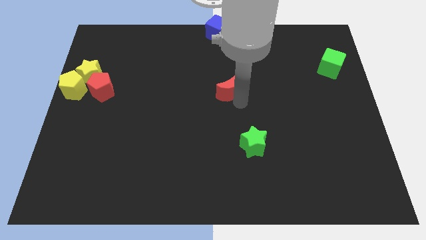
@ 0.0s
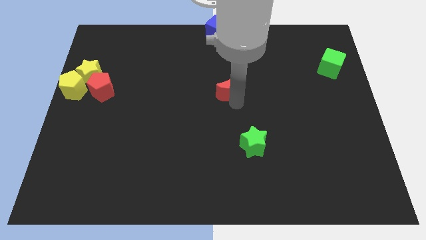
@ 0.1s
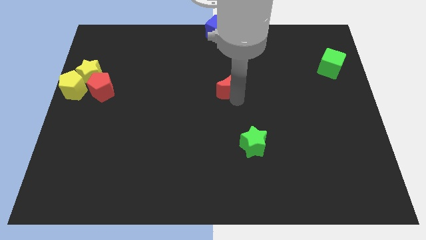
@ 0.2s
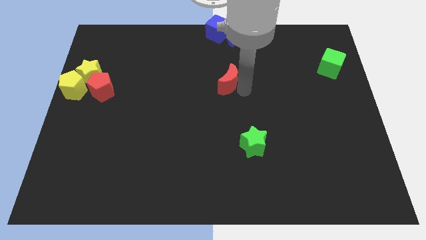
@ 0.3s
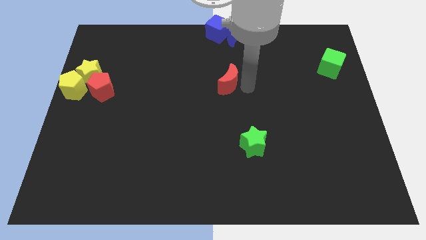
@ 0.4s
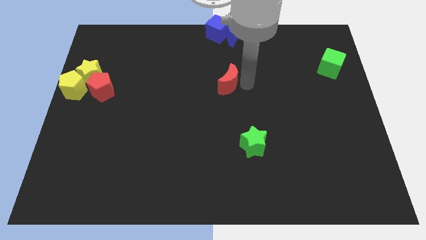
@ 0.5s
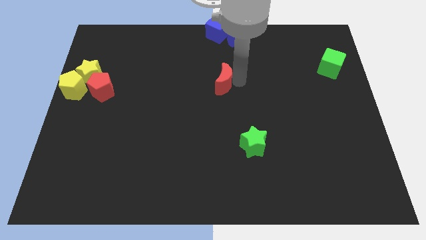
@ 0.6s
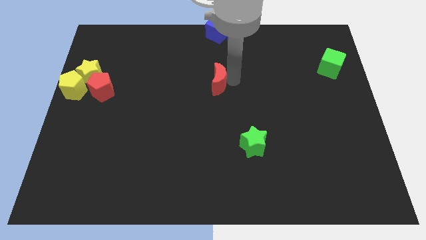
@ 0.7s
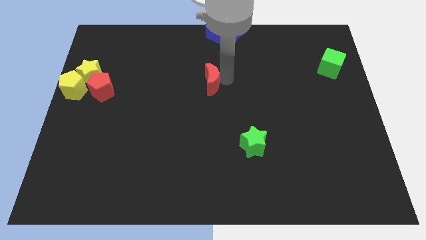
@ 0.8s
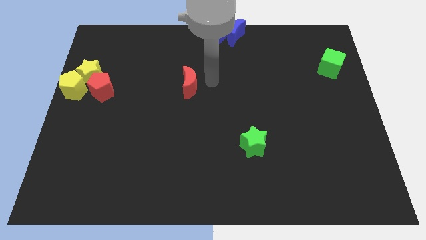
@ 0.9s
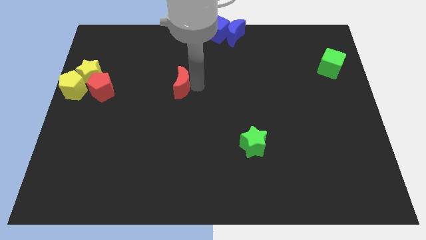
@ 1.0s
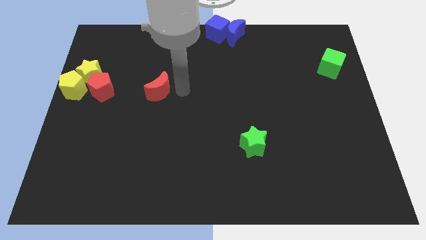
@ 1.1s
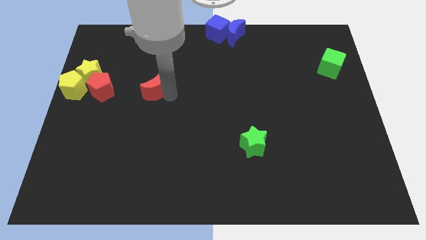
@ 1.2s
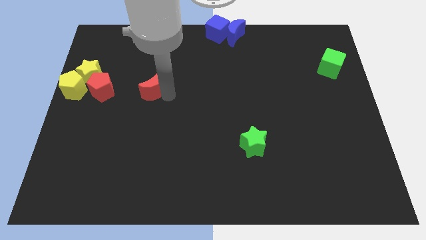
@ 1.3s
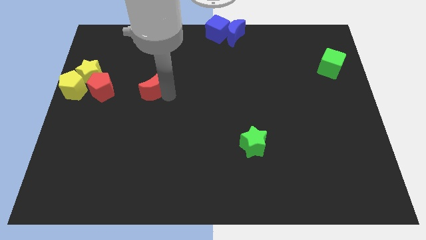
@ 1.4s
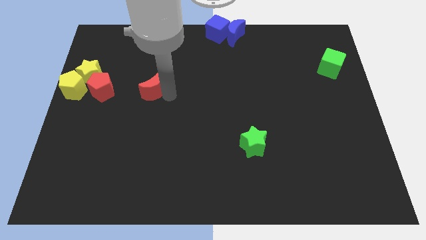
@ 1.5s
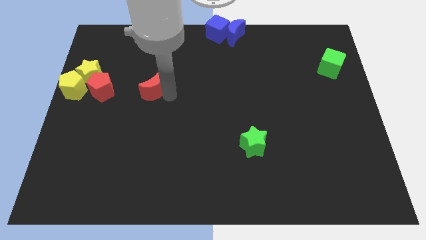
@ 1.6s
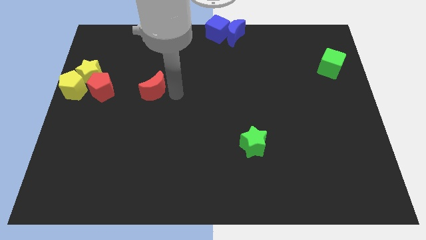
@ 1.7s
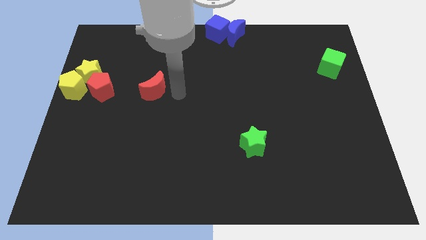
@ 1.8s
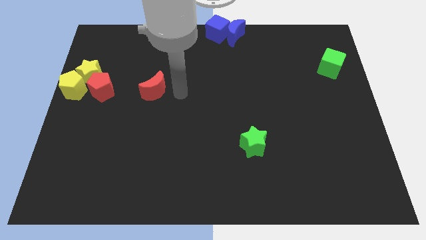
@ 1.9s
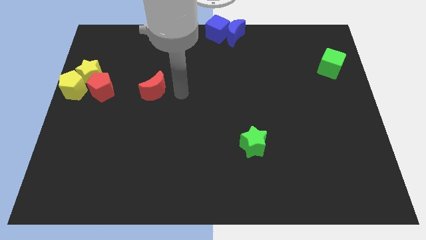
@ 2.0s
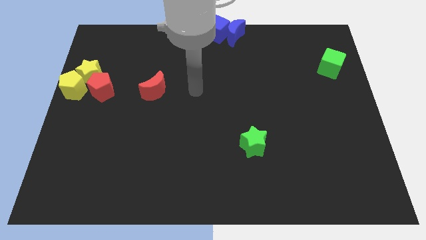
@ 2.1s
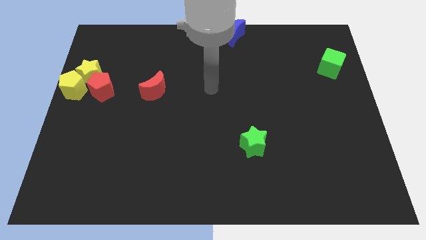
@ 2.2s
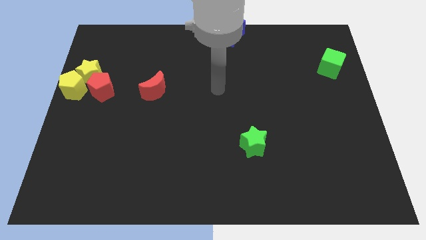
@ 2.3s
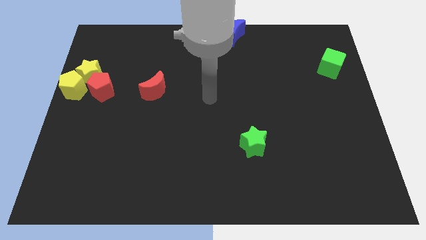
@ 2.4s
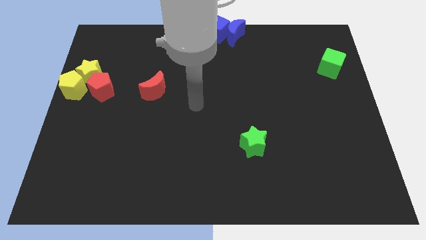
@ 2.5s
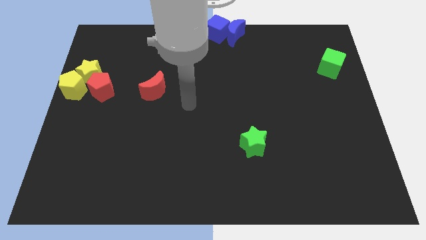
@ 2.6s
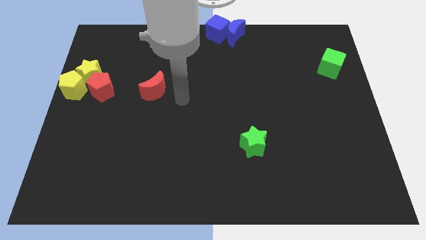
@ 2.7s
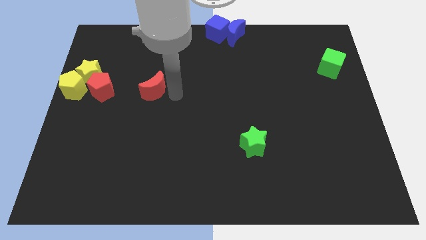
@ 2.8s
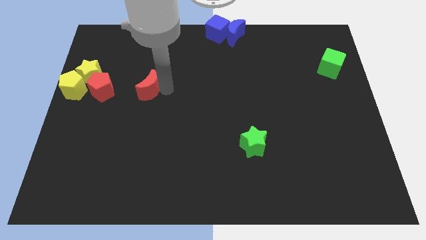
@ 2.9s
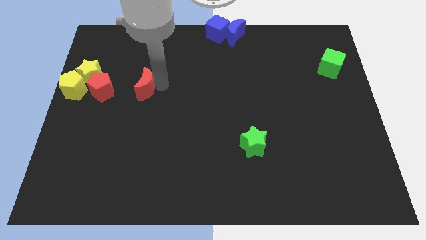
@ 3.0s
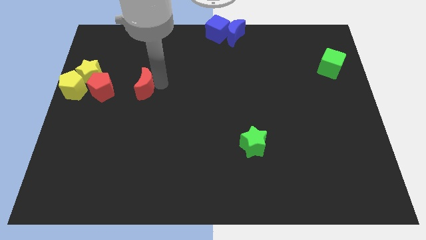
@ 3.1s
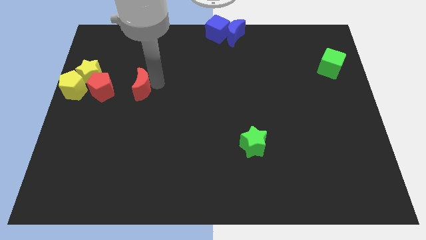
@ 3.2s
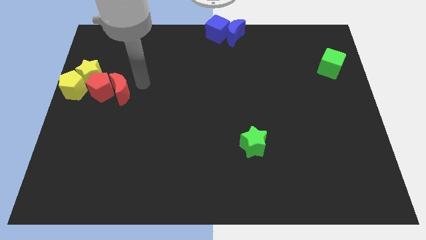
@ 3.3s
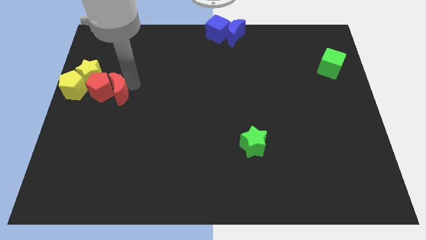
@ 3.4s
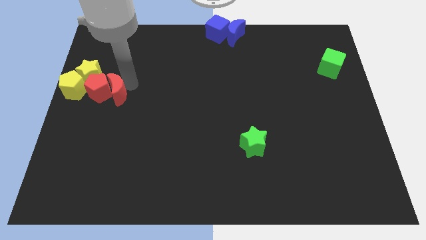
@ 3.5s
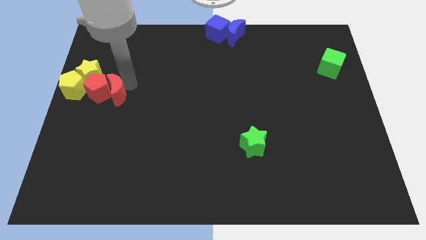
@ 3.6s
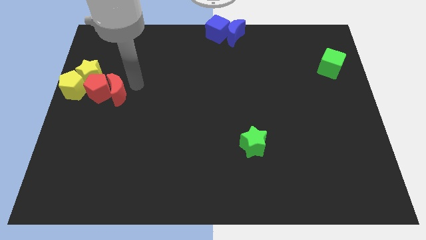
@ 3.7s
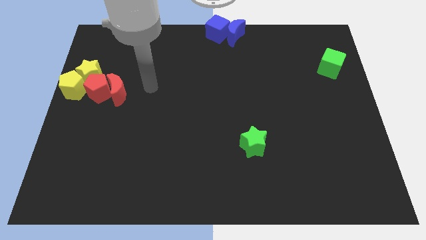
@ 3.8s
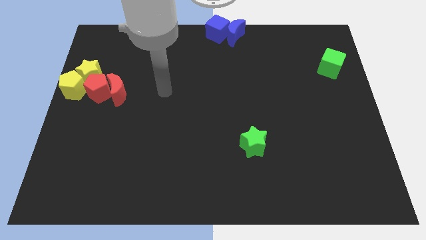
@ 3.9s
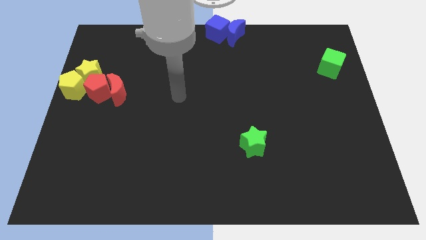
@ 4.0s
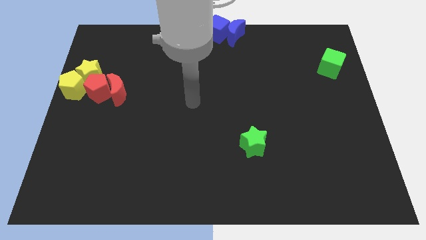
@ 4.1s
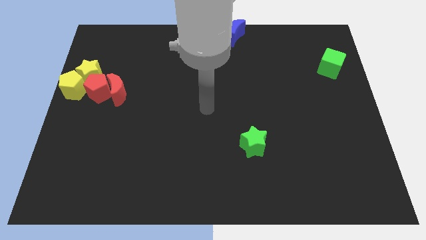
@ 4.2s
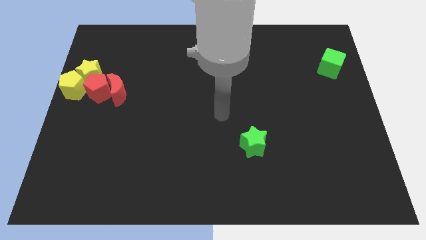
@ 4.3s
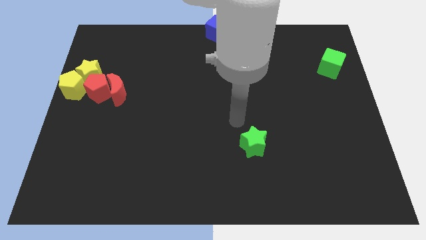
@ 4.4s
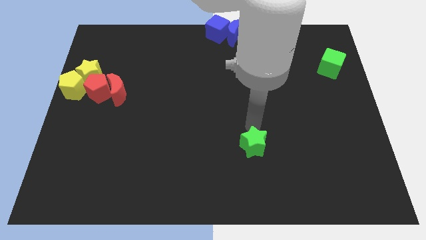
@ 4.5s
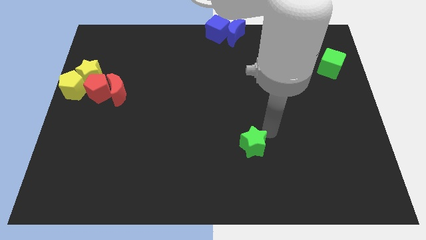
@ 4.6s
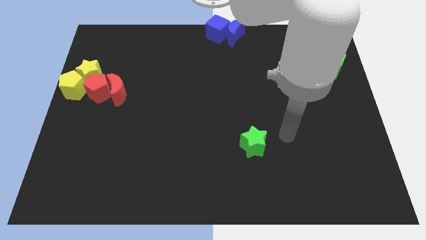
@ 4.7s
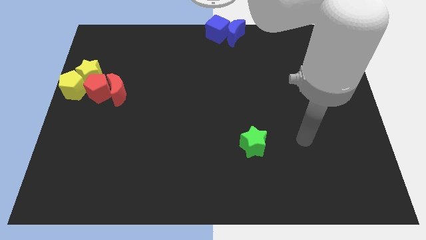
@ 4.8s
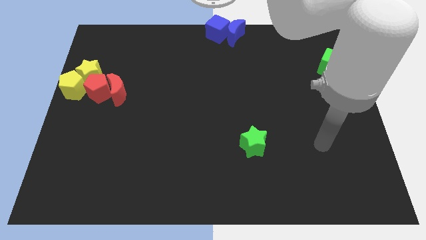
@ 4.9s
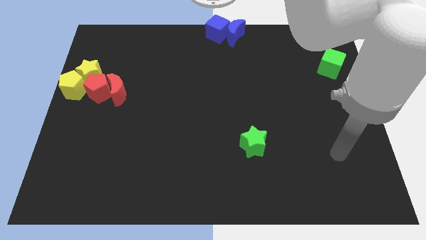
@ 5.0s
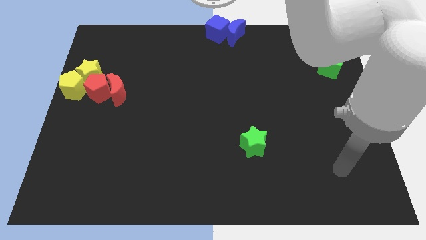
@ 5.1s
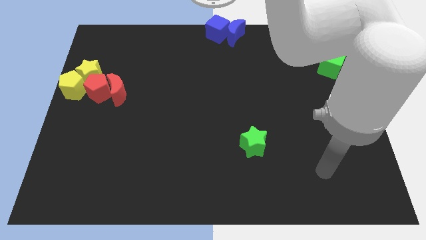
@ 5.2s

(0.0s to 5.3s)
push red crescent into red pentagon

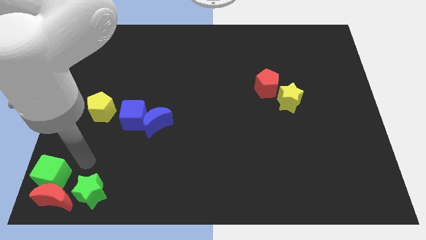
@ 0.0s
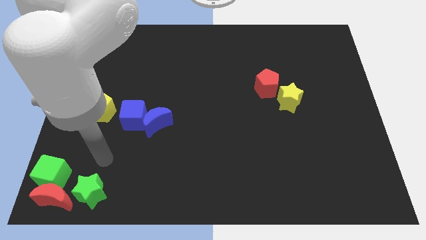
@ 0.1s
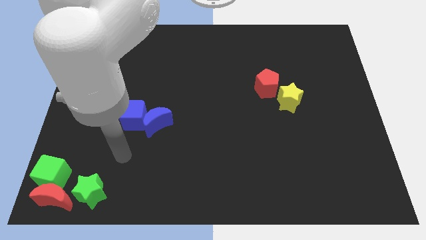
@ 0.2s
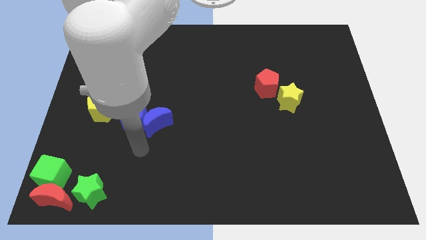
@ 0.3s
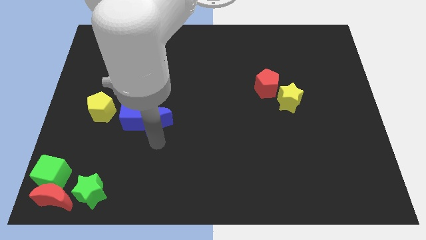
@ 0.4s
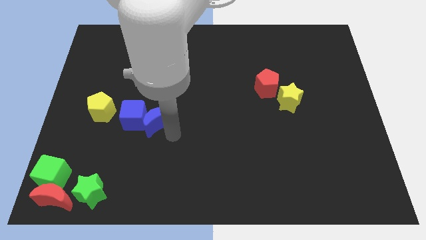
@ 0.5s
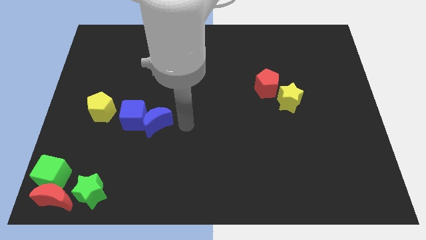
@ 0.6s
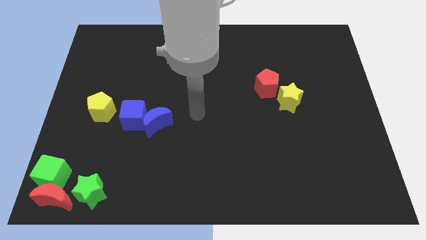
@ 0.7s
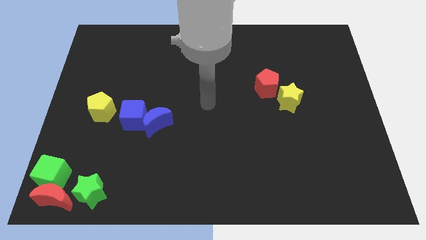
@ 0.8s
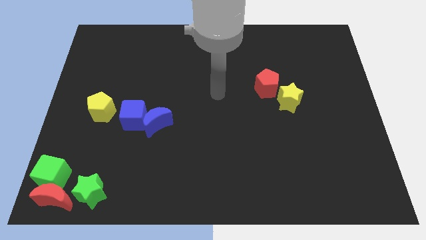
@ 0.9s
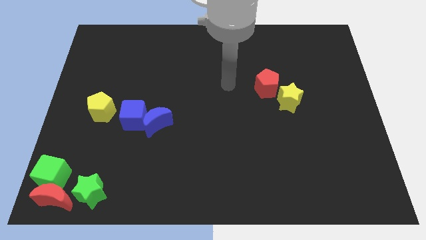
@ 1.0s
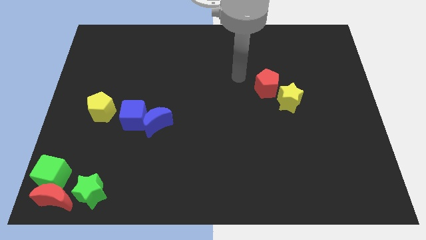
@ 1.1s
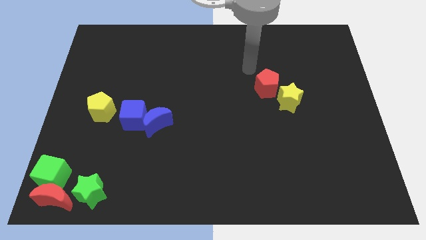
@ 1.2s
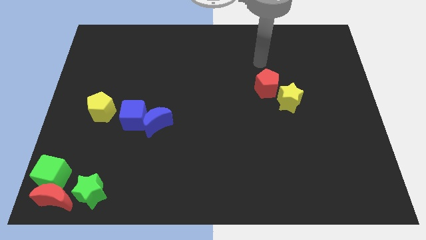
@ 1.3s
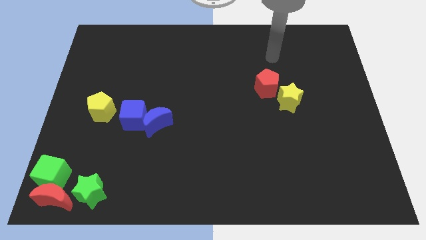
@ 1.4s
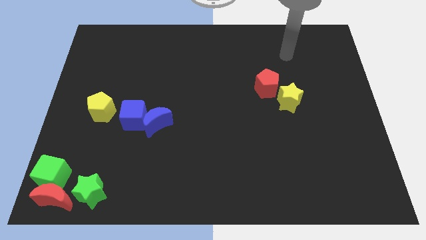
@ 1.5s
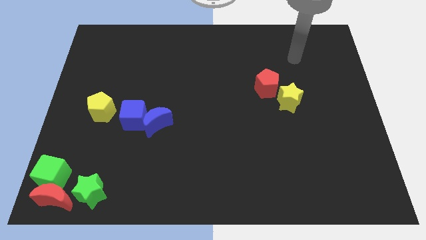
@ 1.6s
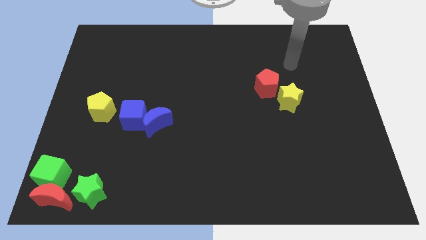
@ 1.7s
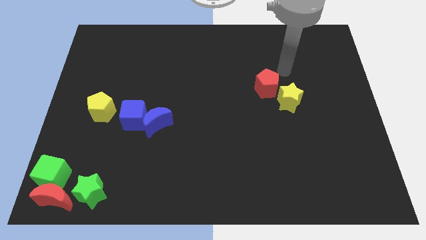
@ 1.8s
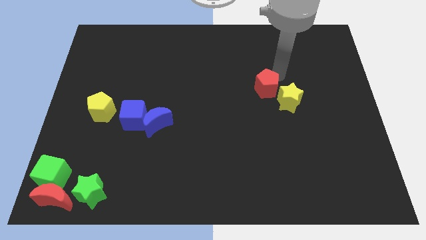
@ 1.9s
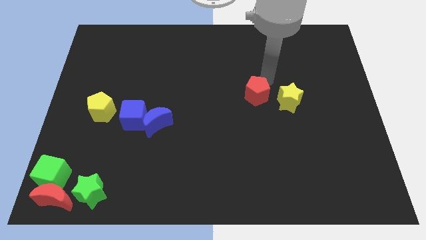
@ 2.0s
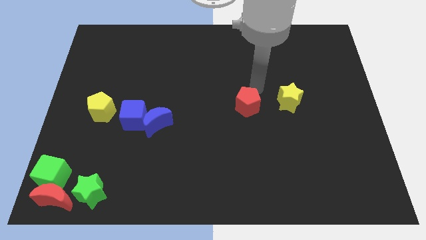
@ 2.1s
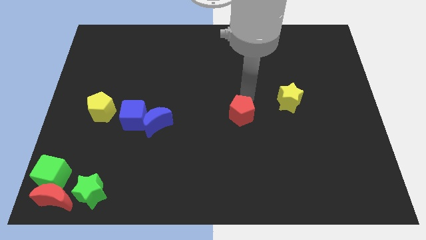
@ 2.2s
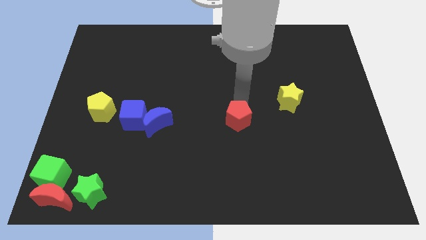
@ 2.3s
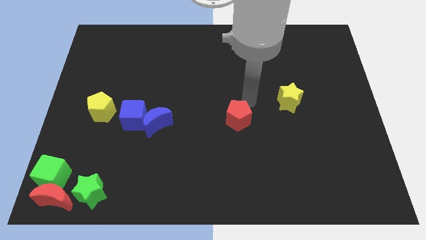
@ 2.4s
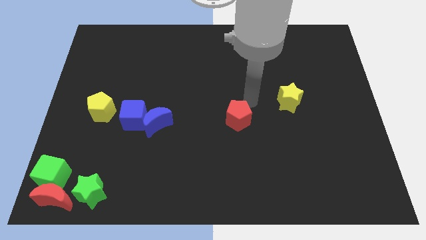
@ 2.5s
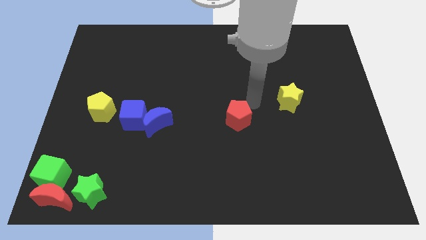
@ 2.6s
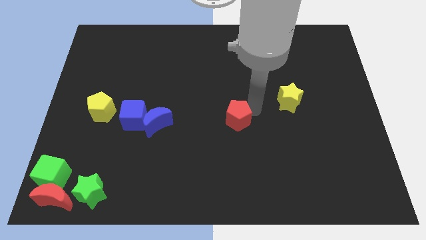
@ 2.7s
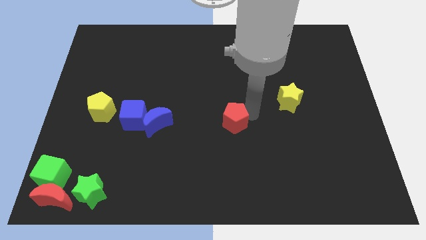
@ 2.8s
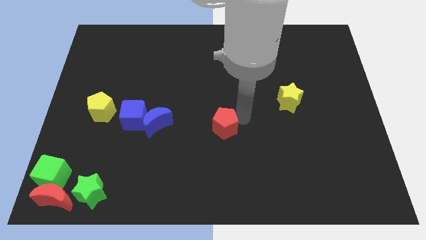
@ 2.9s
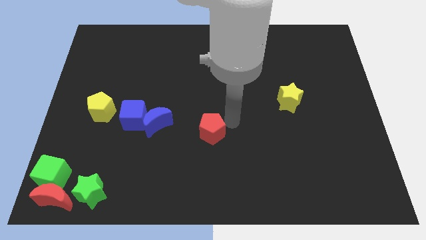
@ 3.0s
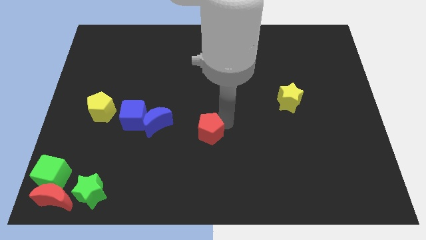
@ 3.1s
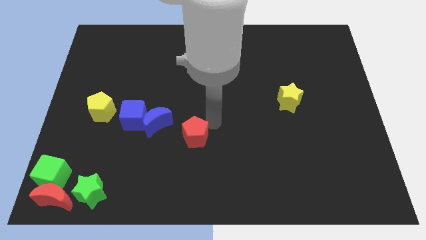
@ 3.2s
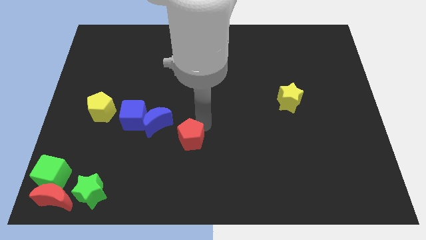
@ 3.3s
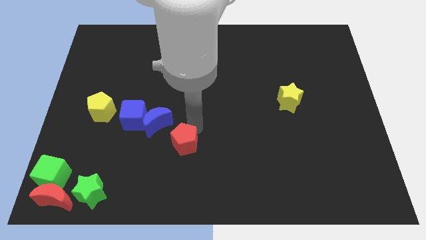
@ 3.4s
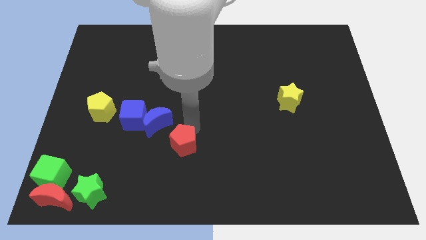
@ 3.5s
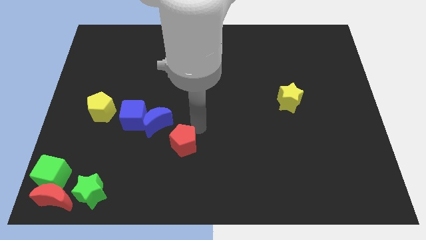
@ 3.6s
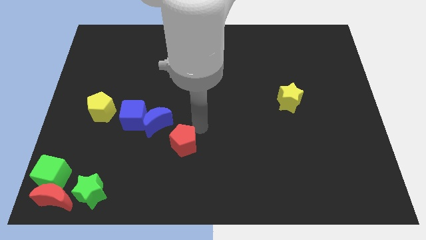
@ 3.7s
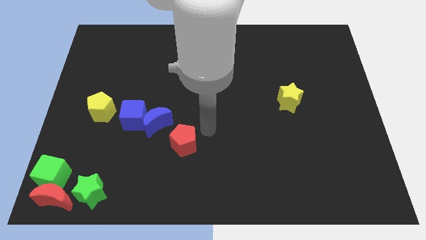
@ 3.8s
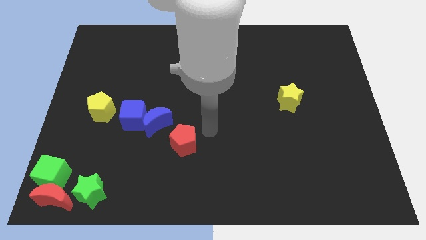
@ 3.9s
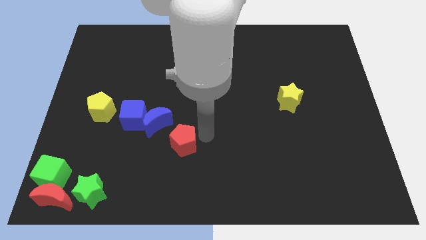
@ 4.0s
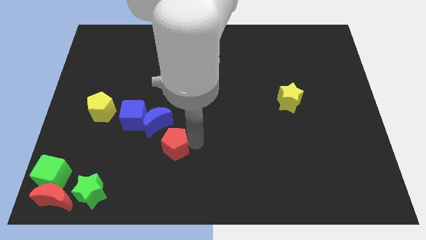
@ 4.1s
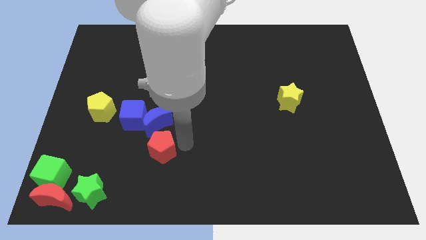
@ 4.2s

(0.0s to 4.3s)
drag the red pentagon to the bottom right side of the blue crescent
